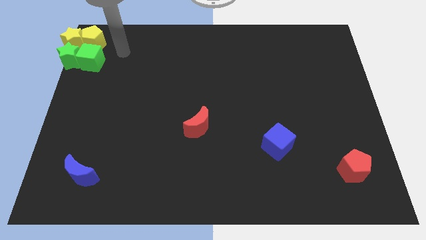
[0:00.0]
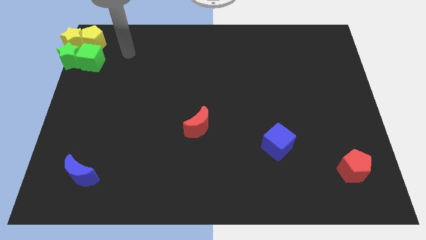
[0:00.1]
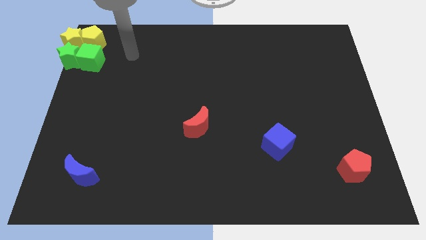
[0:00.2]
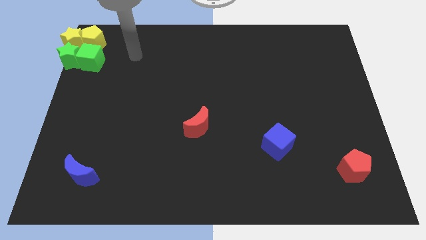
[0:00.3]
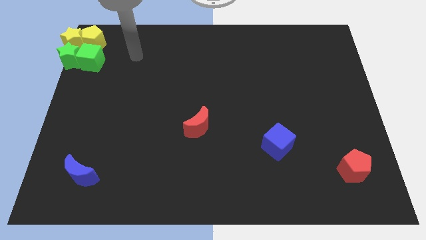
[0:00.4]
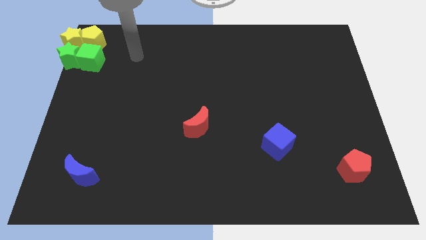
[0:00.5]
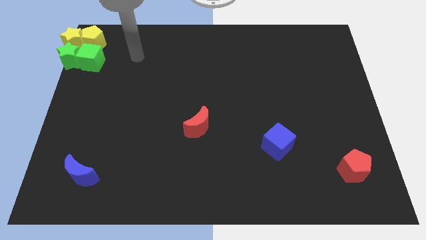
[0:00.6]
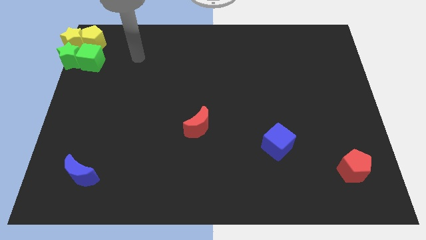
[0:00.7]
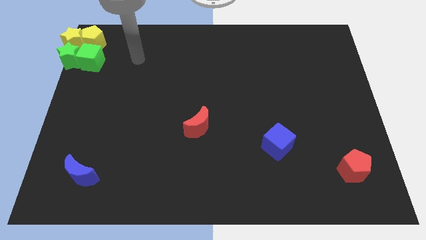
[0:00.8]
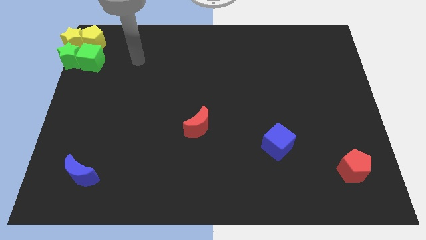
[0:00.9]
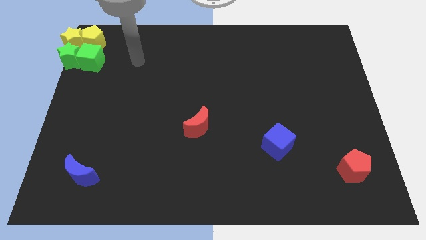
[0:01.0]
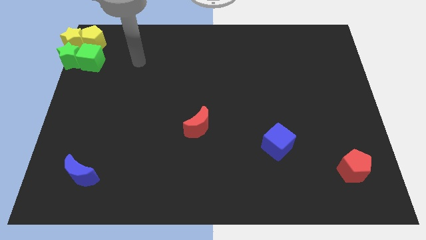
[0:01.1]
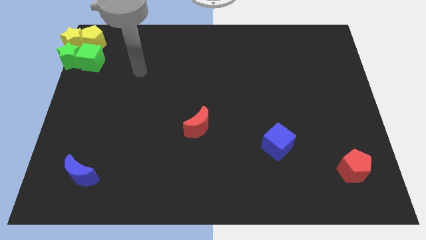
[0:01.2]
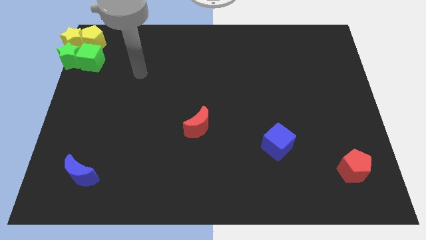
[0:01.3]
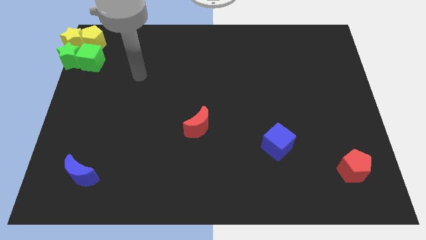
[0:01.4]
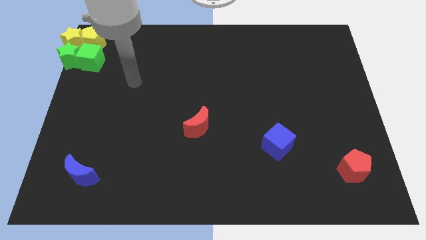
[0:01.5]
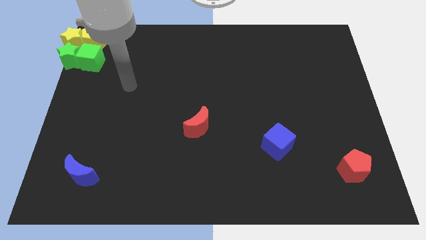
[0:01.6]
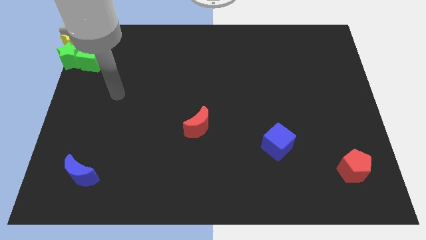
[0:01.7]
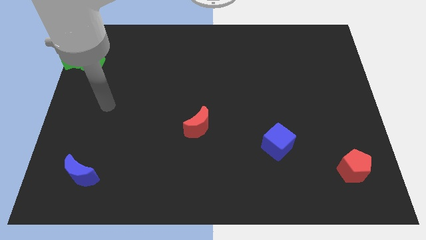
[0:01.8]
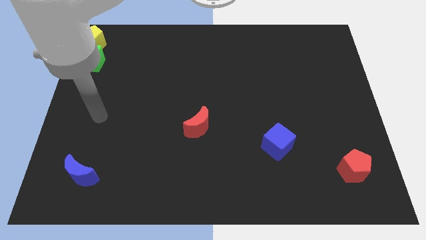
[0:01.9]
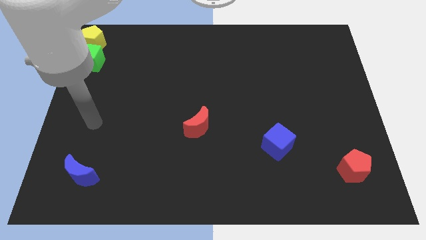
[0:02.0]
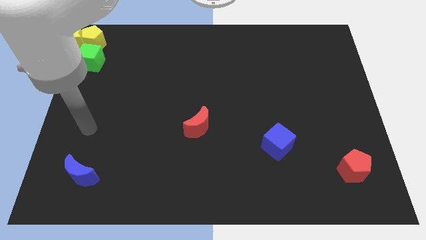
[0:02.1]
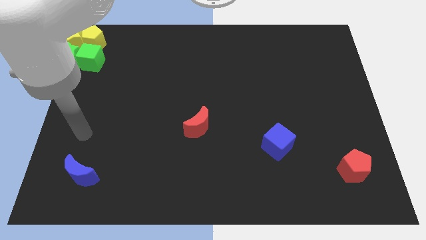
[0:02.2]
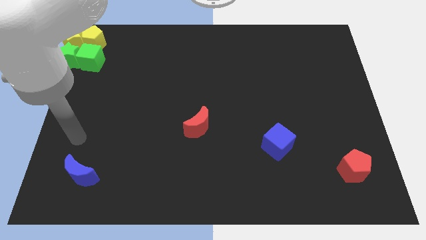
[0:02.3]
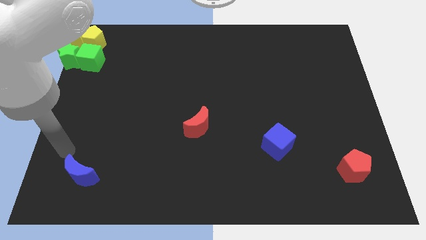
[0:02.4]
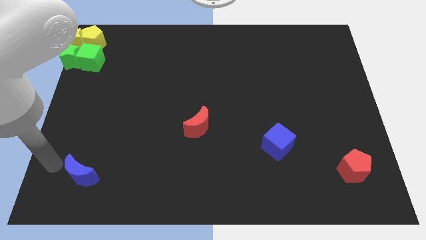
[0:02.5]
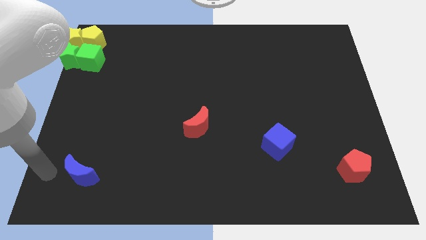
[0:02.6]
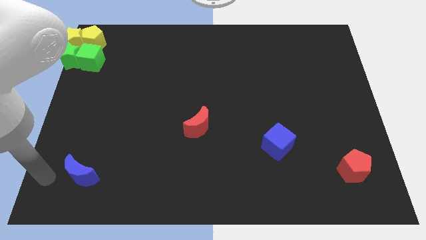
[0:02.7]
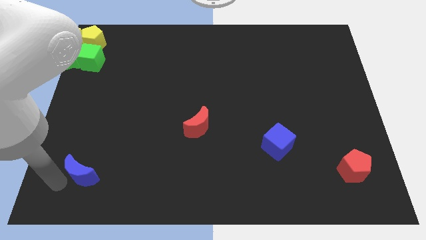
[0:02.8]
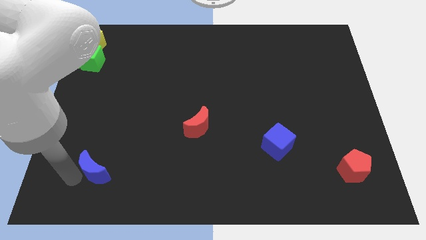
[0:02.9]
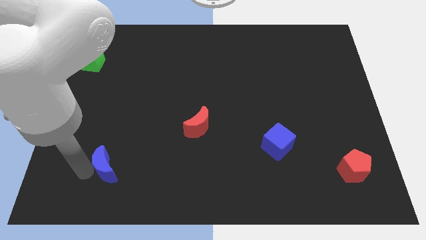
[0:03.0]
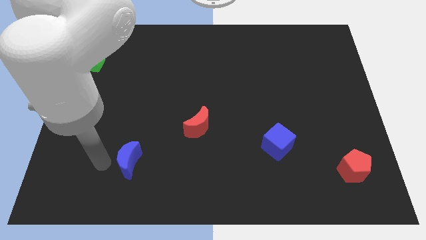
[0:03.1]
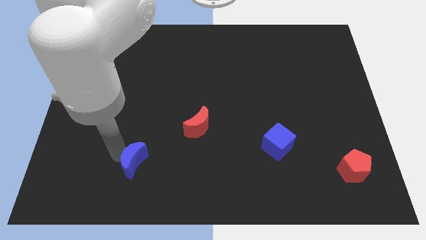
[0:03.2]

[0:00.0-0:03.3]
move the blue crescent diagonally bottom right to the green cube

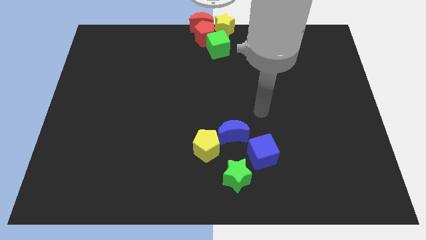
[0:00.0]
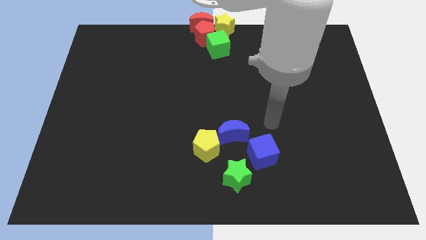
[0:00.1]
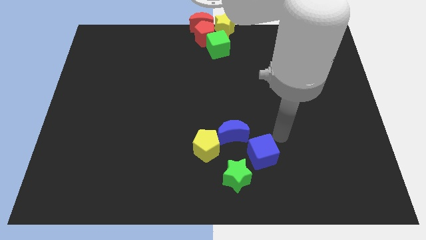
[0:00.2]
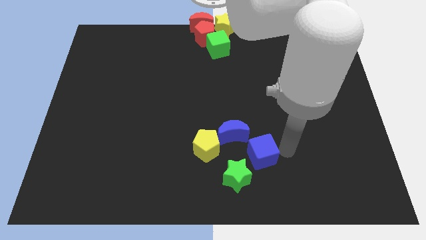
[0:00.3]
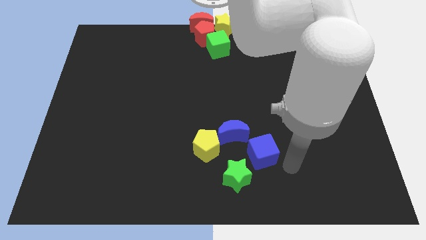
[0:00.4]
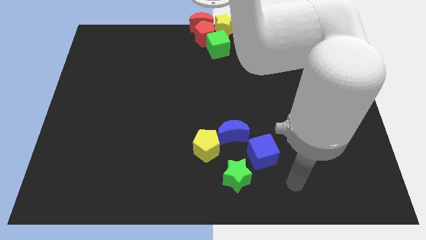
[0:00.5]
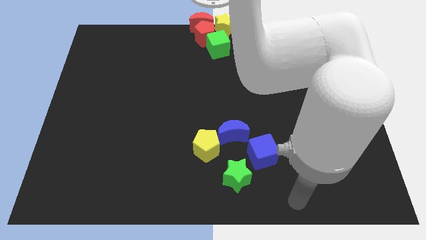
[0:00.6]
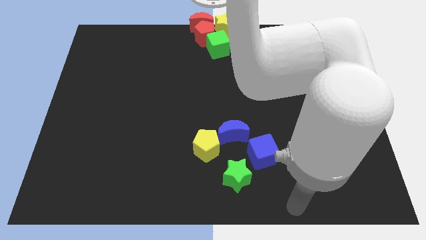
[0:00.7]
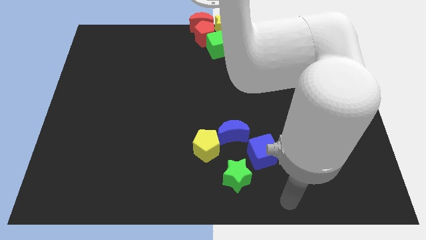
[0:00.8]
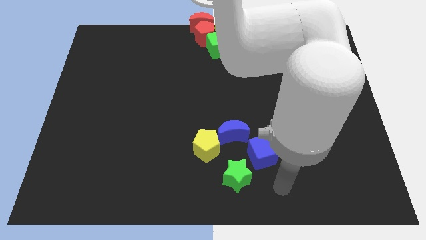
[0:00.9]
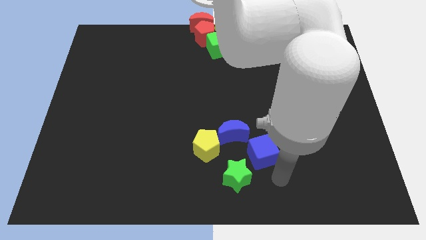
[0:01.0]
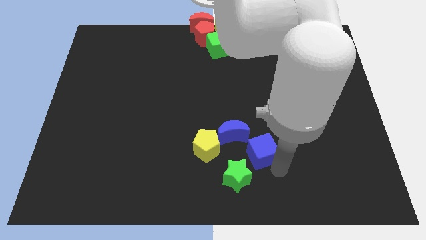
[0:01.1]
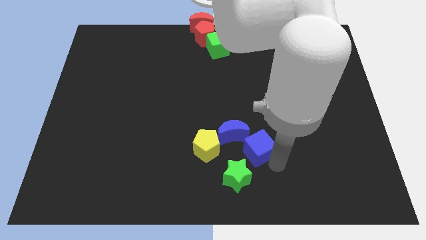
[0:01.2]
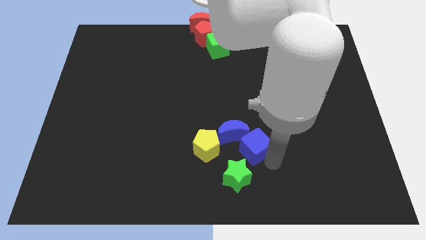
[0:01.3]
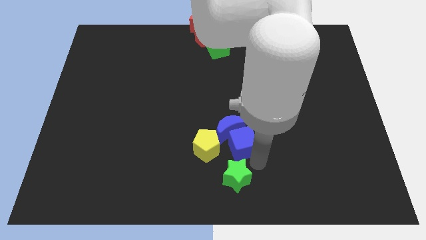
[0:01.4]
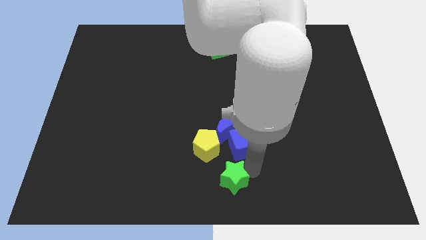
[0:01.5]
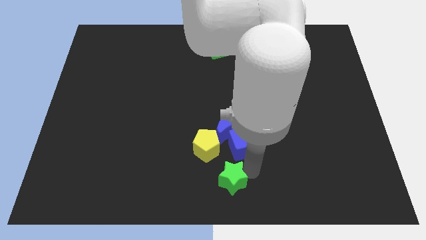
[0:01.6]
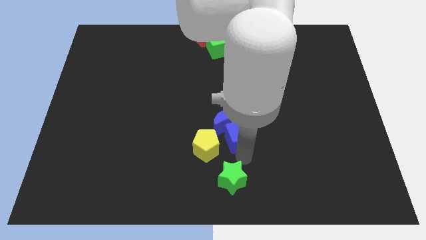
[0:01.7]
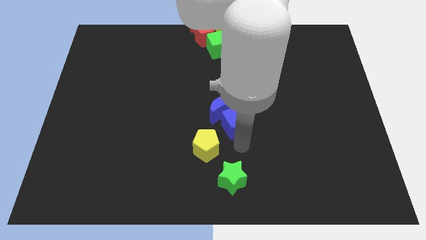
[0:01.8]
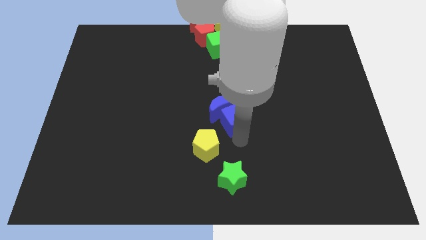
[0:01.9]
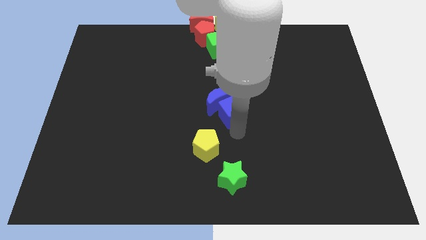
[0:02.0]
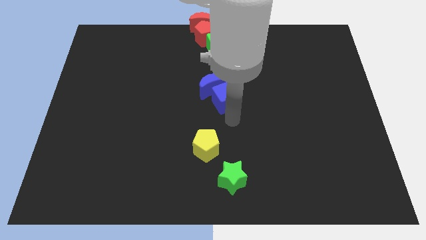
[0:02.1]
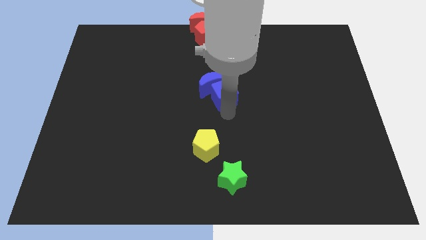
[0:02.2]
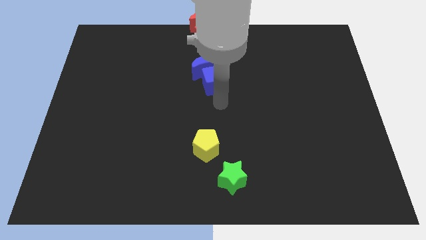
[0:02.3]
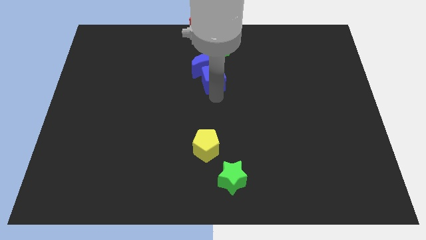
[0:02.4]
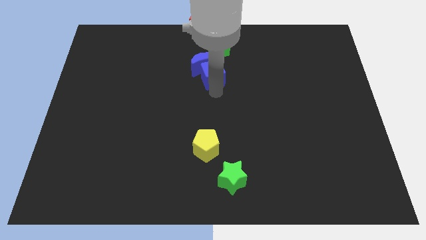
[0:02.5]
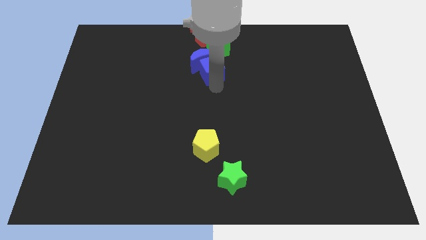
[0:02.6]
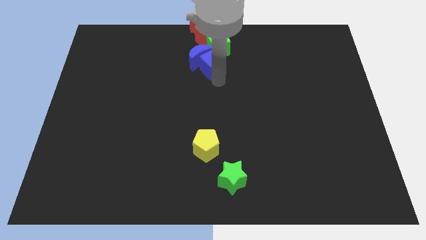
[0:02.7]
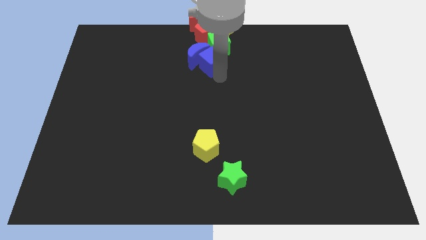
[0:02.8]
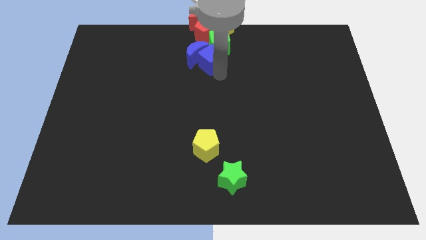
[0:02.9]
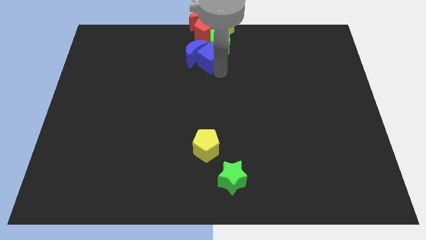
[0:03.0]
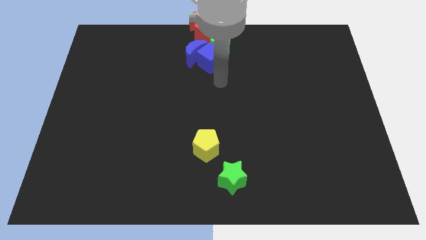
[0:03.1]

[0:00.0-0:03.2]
place the blue blocks to bottom of the green cube

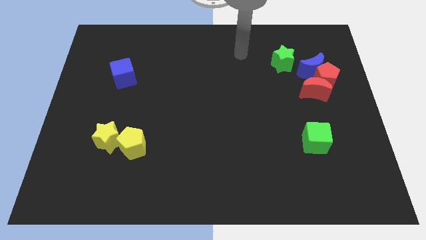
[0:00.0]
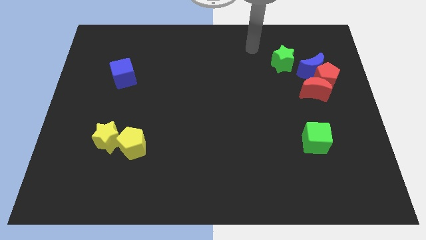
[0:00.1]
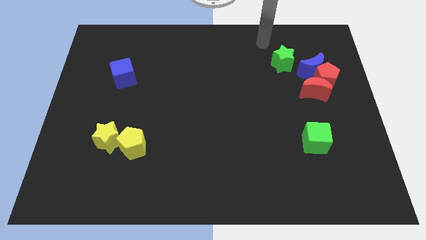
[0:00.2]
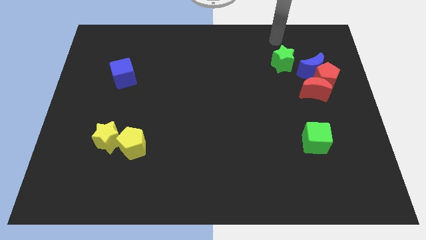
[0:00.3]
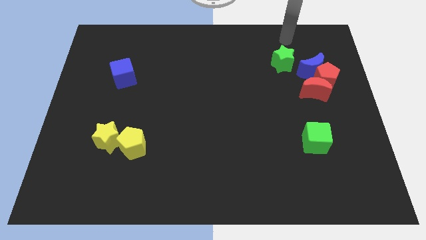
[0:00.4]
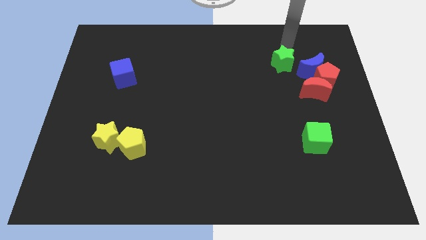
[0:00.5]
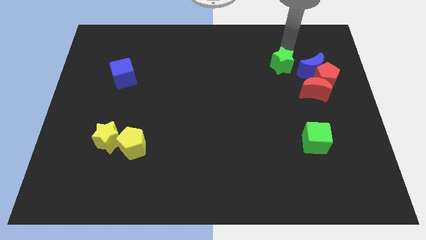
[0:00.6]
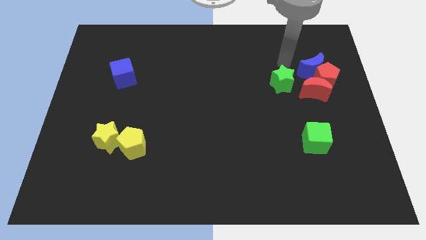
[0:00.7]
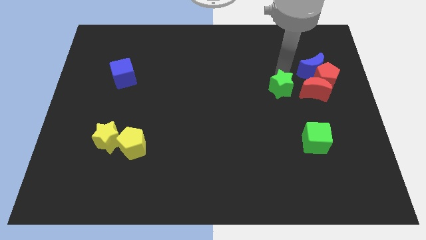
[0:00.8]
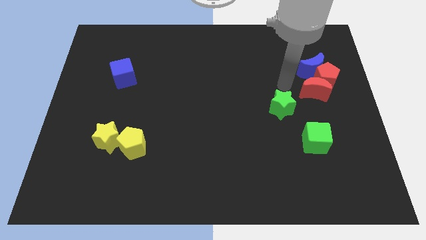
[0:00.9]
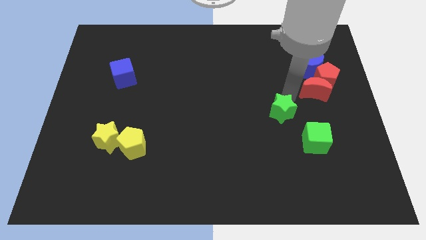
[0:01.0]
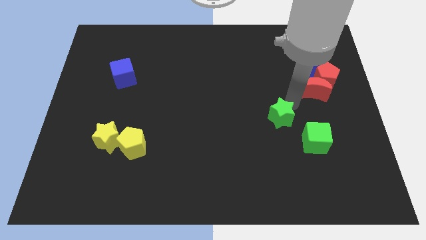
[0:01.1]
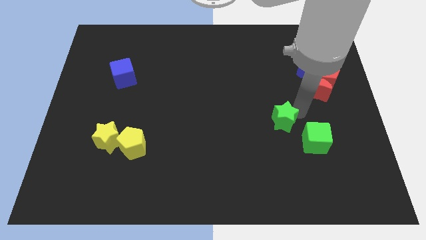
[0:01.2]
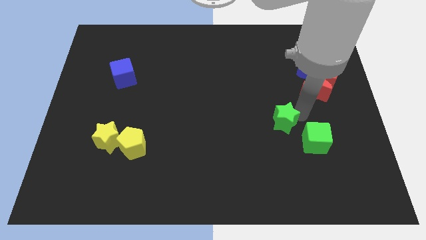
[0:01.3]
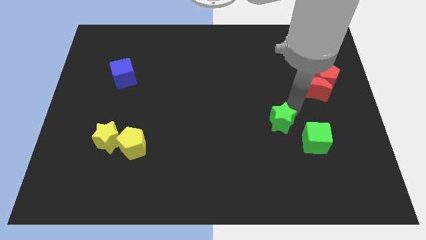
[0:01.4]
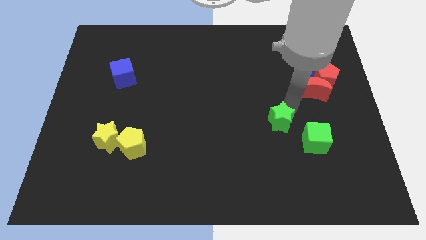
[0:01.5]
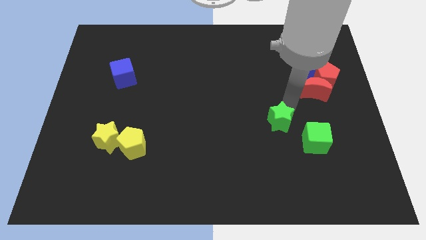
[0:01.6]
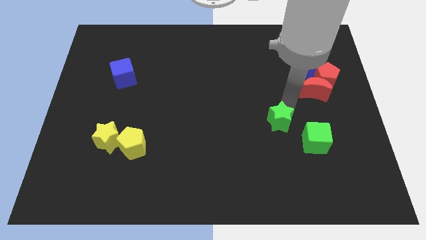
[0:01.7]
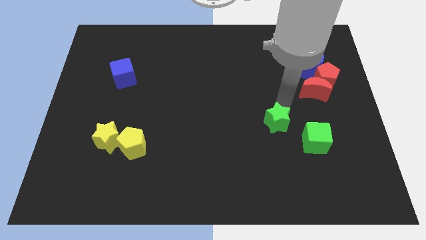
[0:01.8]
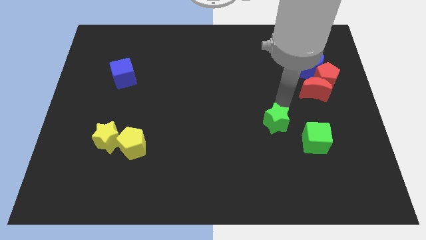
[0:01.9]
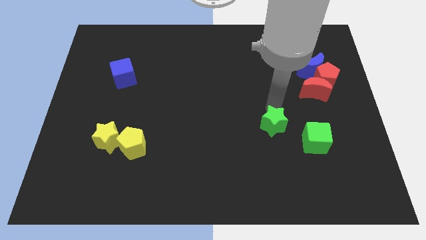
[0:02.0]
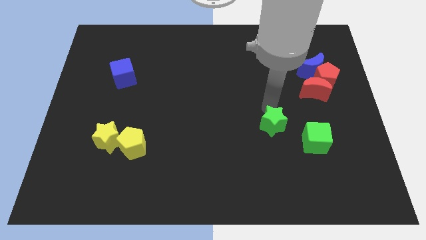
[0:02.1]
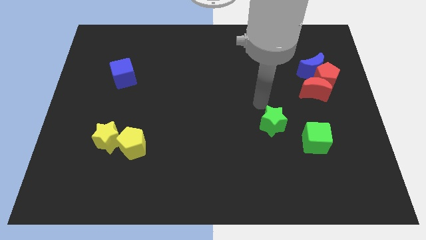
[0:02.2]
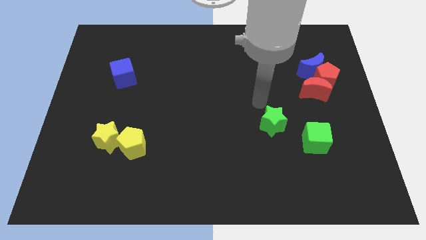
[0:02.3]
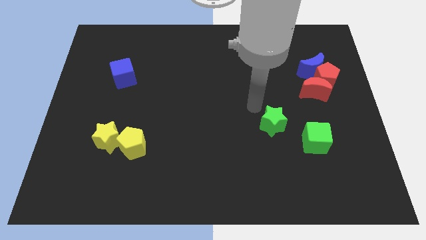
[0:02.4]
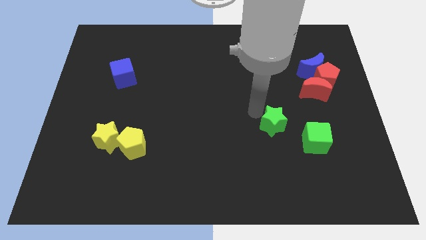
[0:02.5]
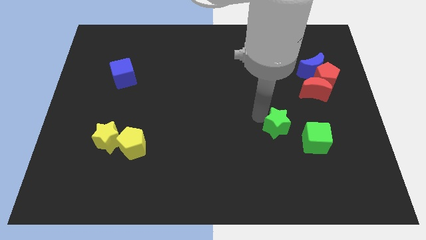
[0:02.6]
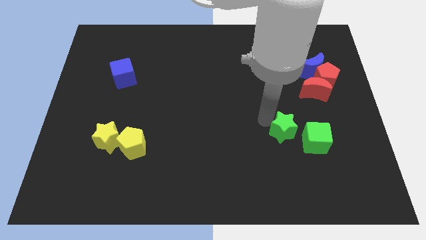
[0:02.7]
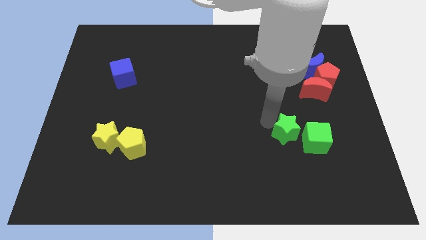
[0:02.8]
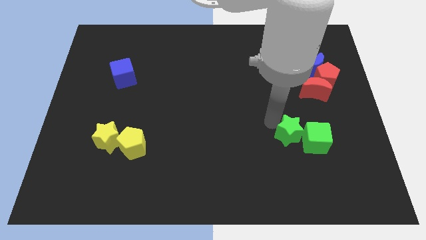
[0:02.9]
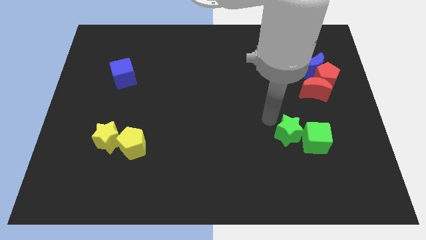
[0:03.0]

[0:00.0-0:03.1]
place green star to the left of the green cube
